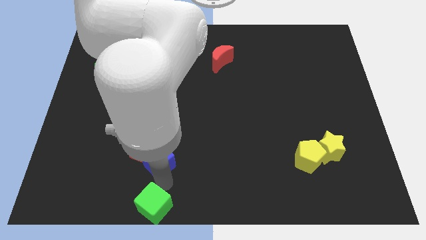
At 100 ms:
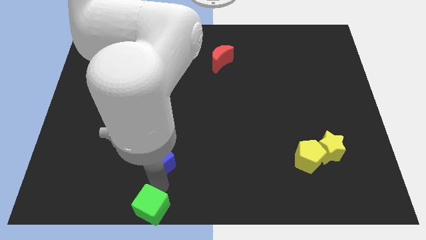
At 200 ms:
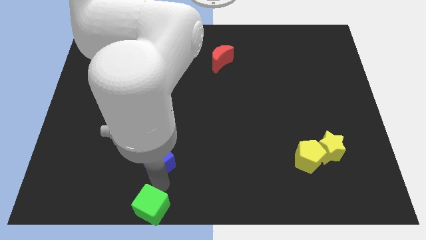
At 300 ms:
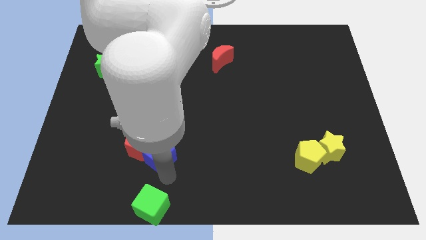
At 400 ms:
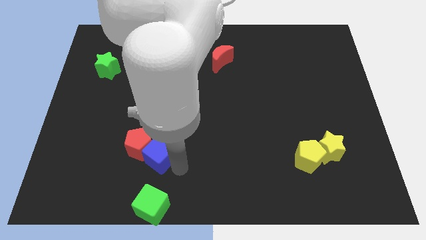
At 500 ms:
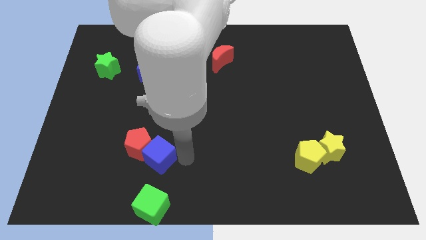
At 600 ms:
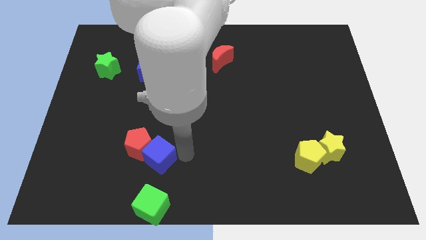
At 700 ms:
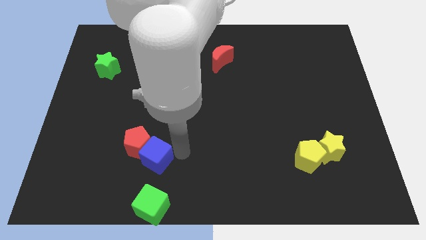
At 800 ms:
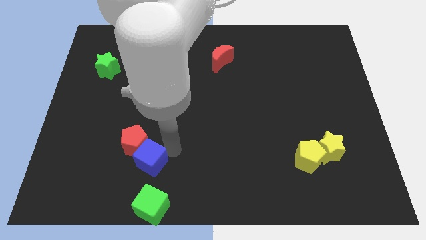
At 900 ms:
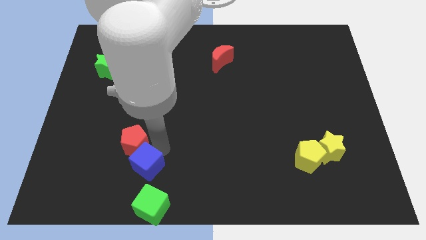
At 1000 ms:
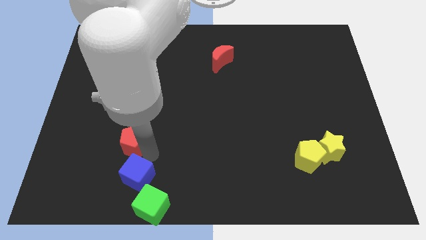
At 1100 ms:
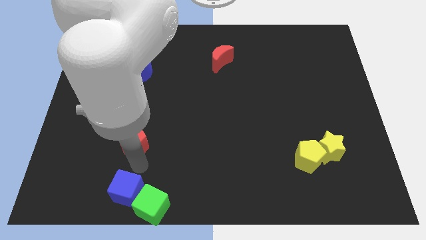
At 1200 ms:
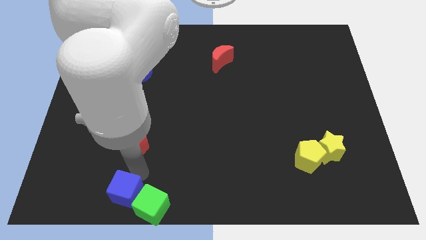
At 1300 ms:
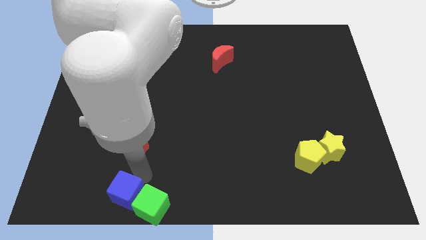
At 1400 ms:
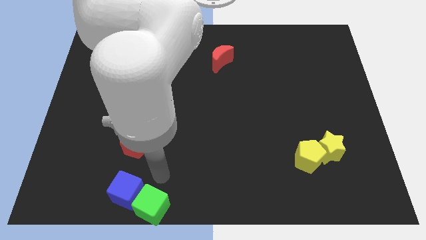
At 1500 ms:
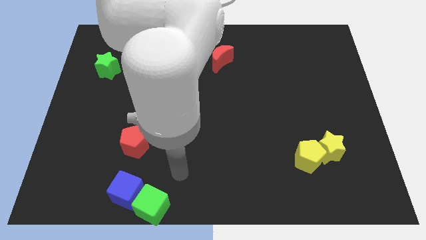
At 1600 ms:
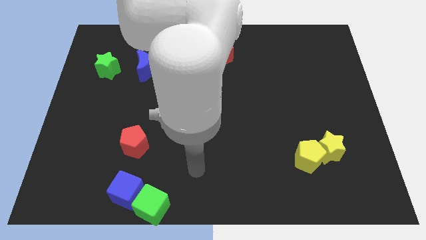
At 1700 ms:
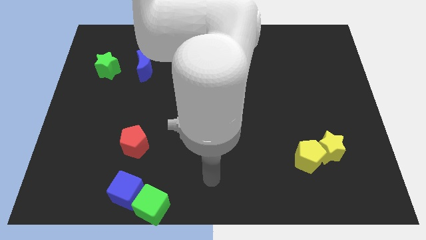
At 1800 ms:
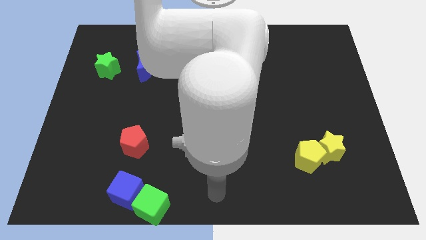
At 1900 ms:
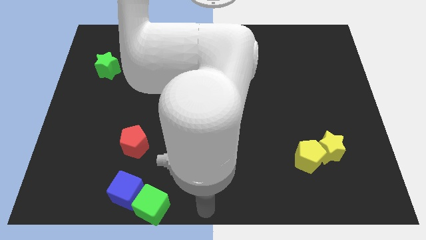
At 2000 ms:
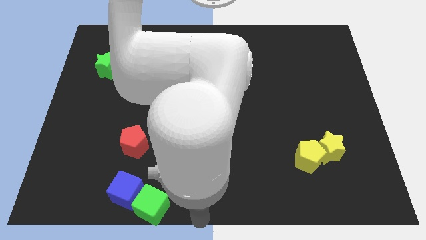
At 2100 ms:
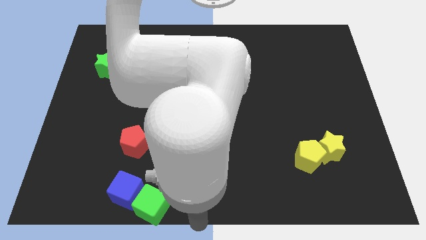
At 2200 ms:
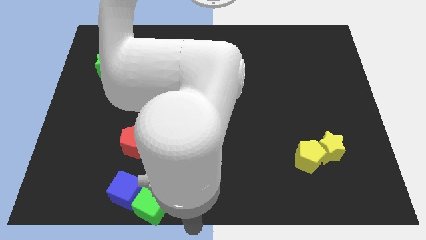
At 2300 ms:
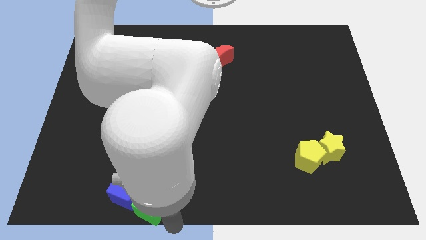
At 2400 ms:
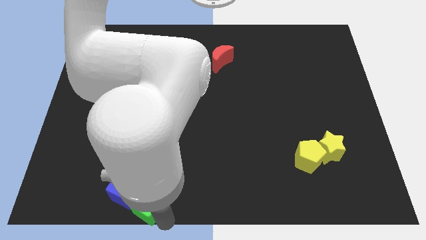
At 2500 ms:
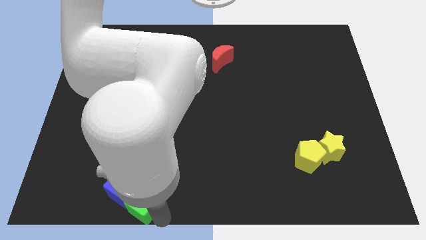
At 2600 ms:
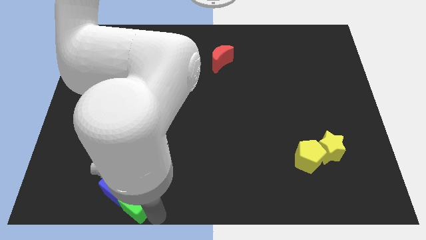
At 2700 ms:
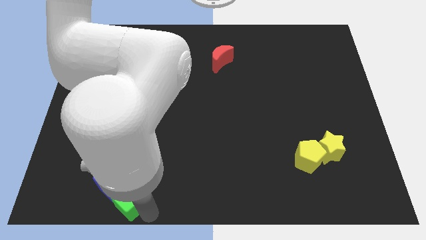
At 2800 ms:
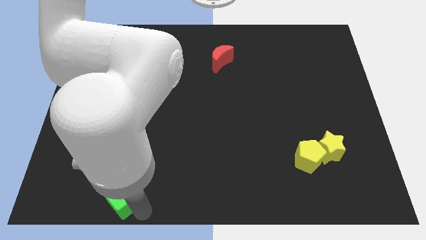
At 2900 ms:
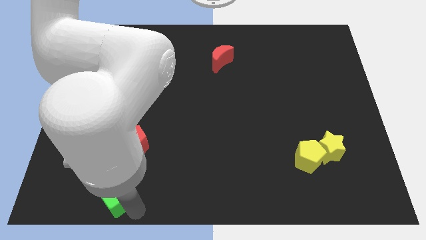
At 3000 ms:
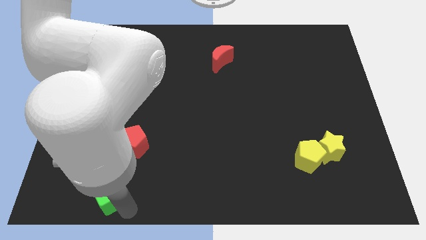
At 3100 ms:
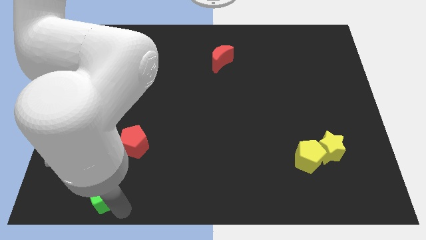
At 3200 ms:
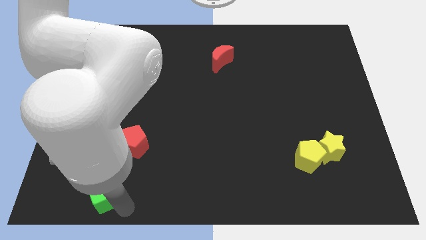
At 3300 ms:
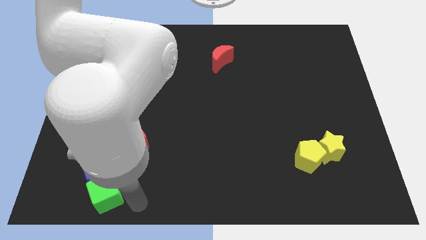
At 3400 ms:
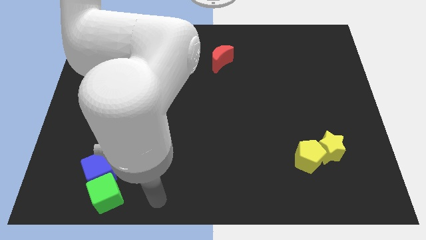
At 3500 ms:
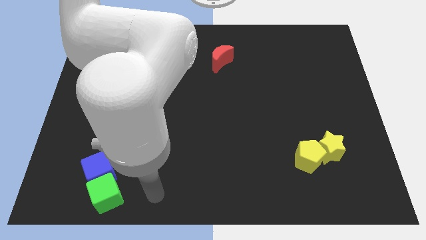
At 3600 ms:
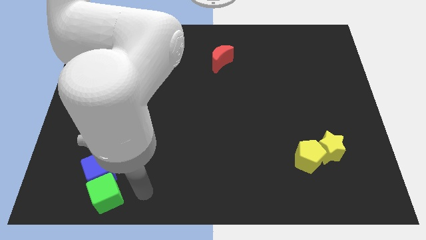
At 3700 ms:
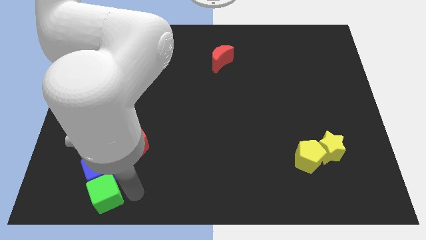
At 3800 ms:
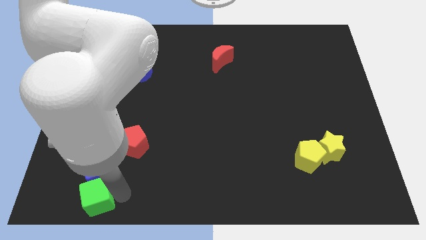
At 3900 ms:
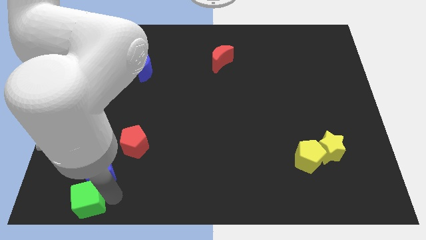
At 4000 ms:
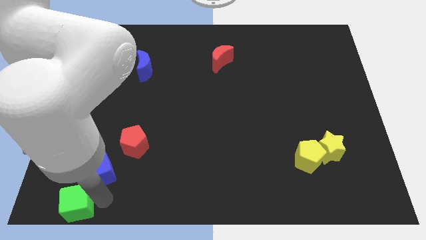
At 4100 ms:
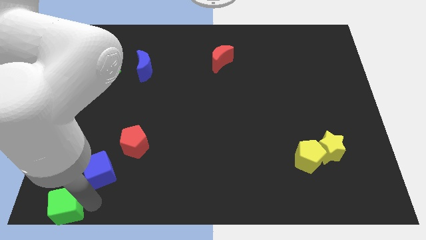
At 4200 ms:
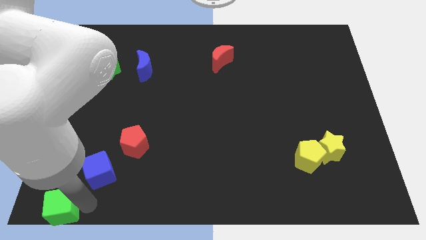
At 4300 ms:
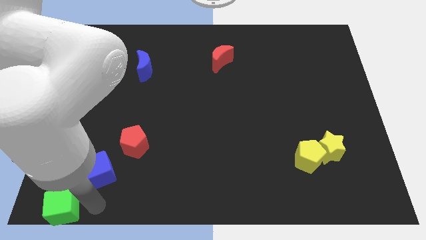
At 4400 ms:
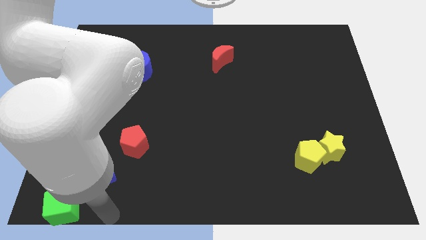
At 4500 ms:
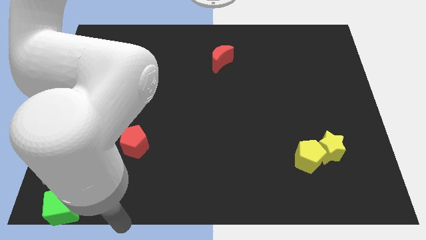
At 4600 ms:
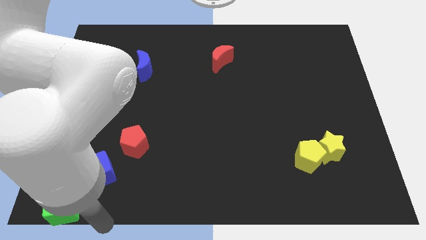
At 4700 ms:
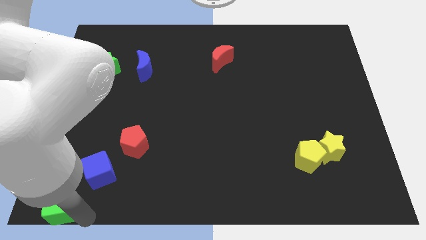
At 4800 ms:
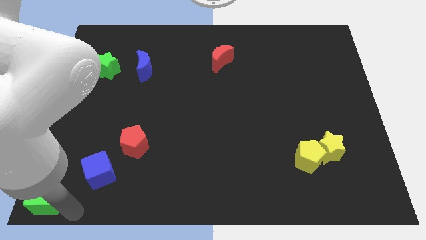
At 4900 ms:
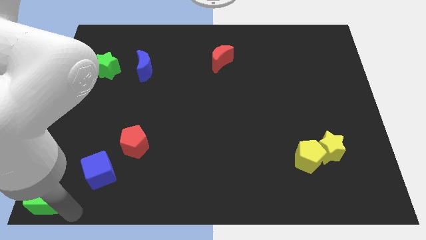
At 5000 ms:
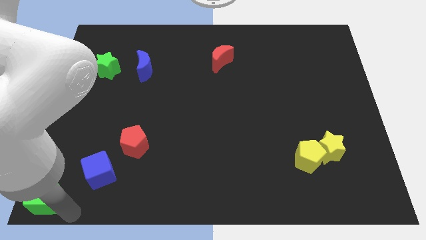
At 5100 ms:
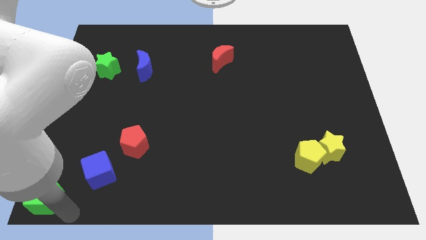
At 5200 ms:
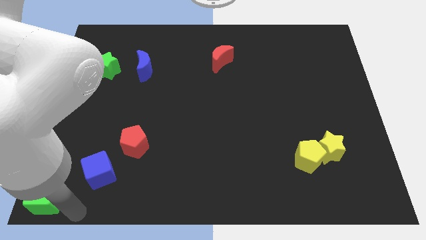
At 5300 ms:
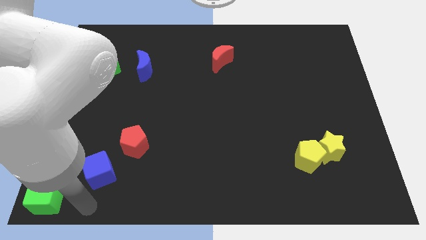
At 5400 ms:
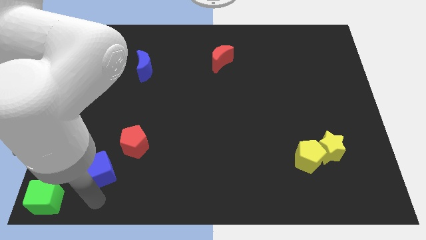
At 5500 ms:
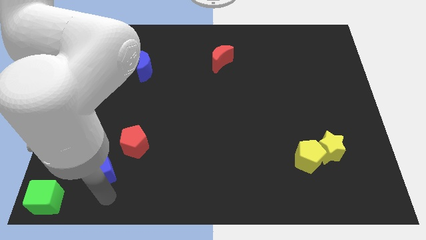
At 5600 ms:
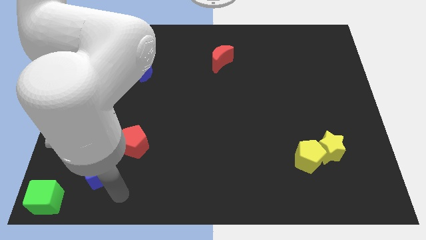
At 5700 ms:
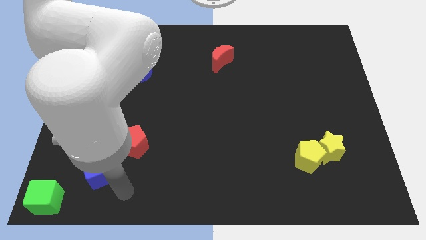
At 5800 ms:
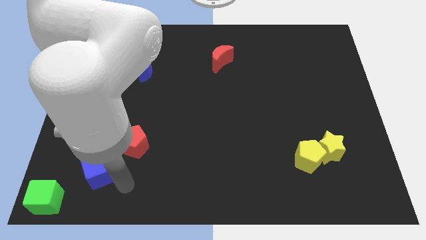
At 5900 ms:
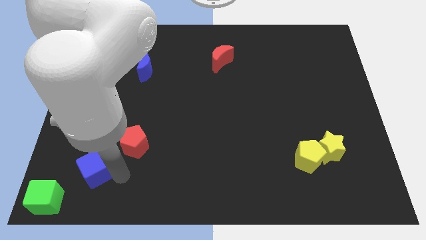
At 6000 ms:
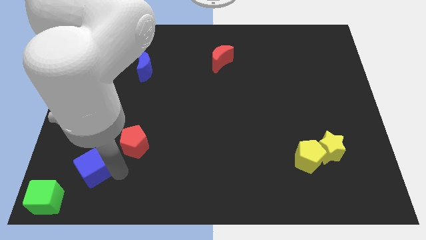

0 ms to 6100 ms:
push the green cube to the bottom left corner

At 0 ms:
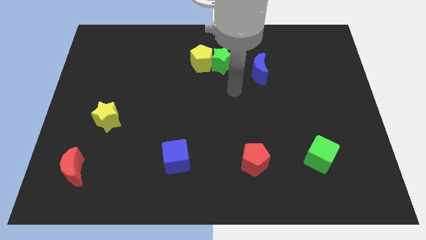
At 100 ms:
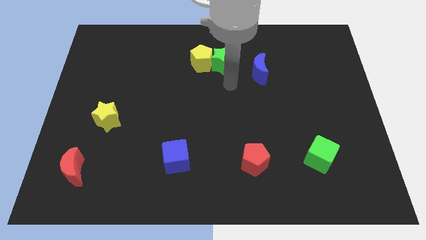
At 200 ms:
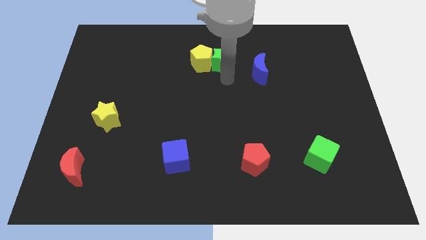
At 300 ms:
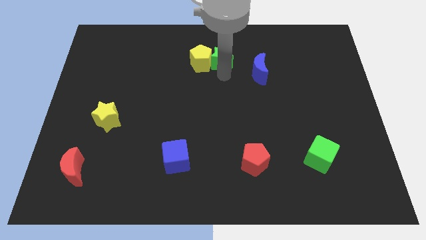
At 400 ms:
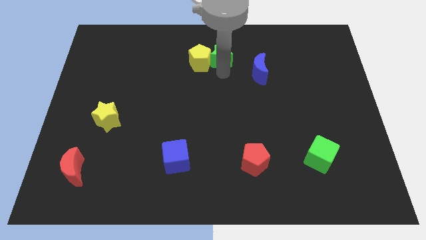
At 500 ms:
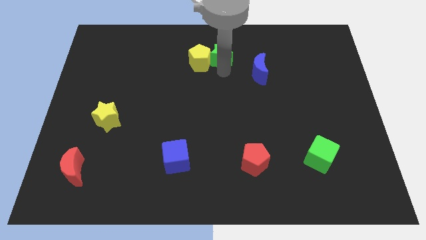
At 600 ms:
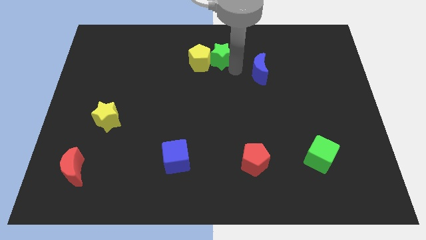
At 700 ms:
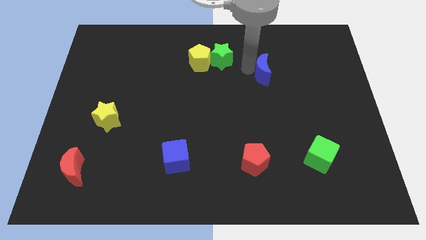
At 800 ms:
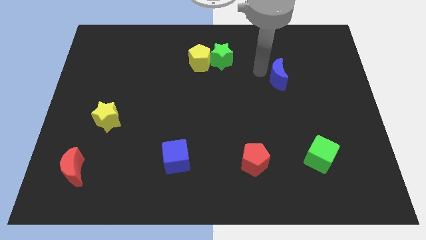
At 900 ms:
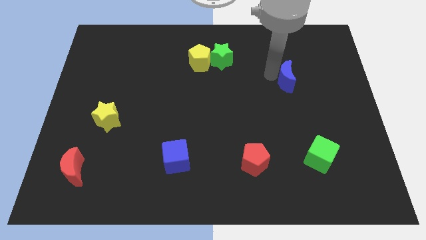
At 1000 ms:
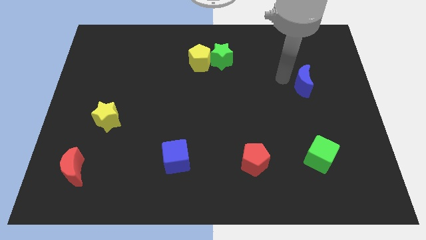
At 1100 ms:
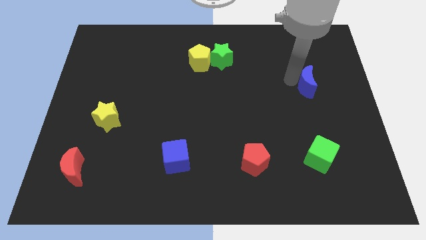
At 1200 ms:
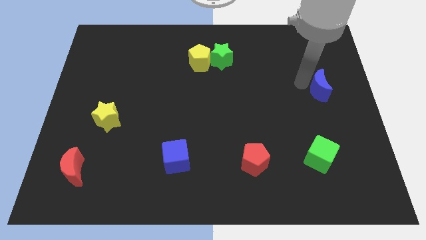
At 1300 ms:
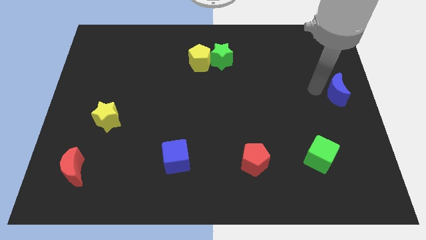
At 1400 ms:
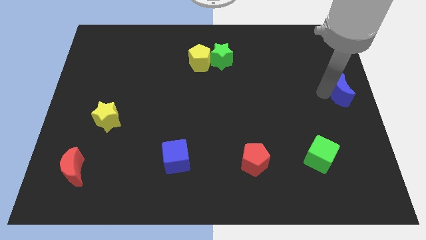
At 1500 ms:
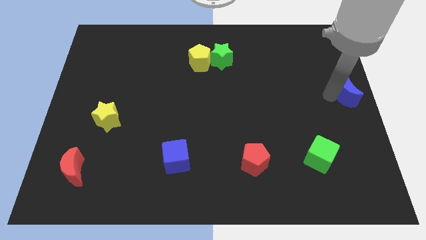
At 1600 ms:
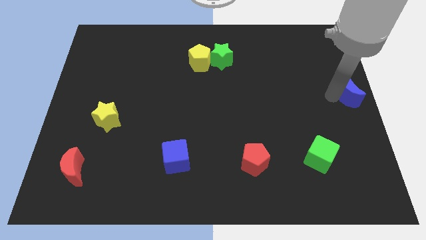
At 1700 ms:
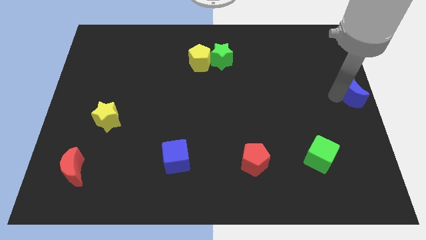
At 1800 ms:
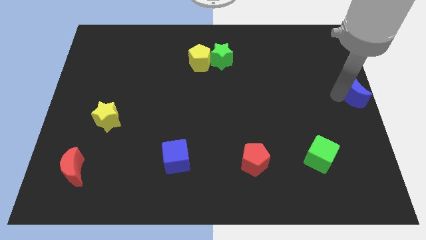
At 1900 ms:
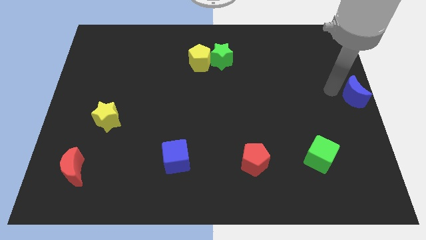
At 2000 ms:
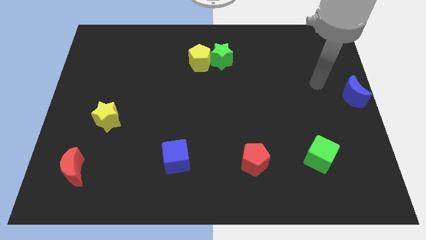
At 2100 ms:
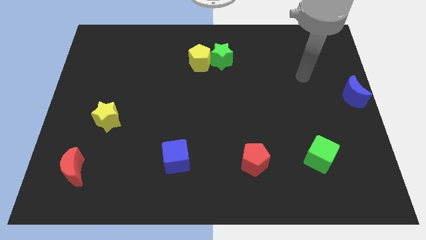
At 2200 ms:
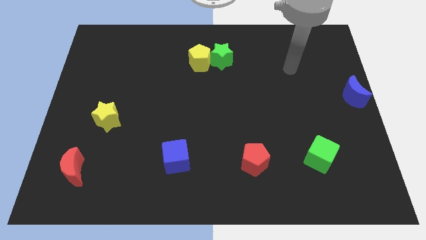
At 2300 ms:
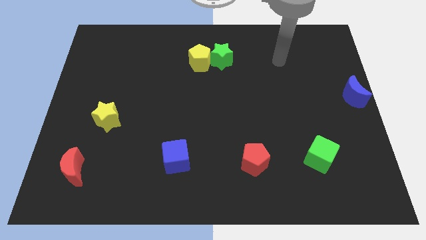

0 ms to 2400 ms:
move the blue crescent to the center right of the board

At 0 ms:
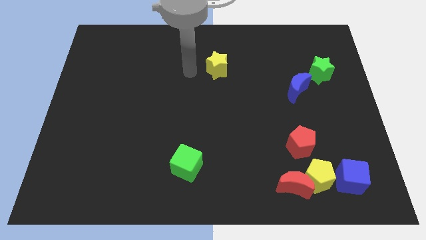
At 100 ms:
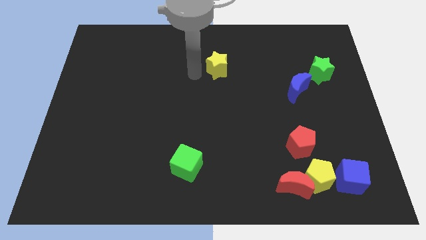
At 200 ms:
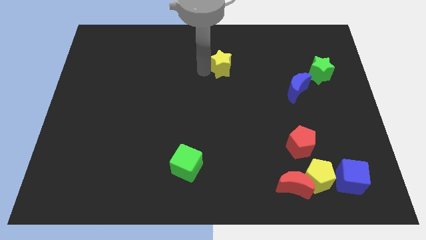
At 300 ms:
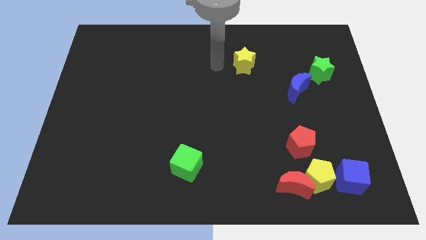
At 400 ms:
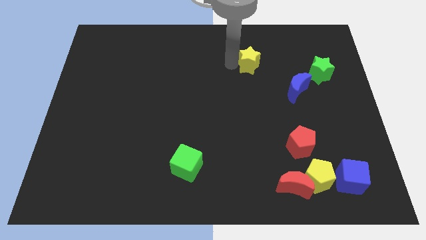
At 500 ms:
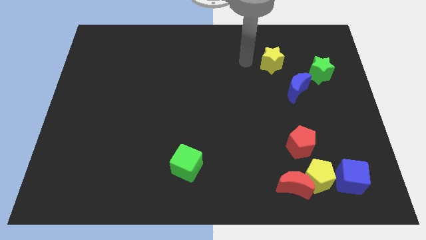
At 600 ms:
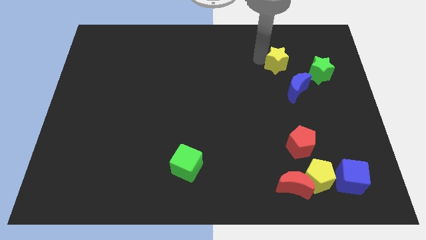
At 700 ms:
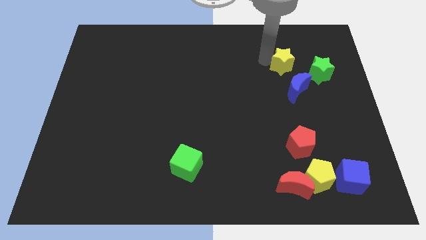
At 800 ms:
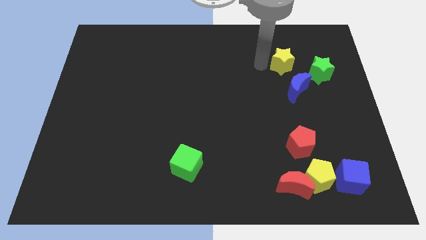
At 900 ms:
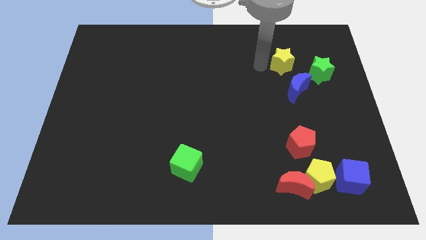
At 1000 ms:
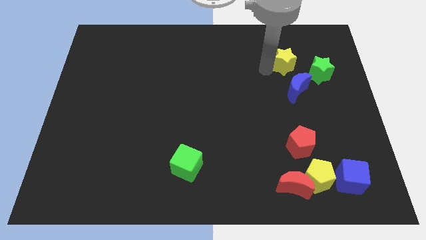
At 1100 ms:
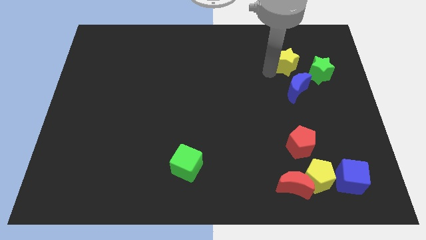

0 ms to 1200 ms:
move yellow star towards green star
